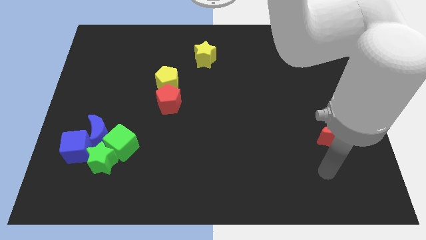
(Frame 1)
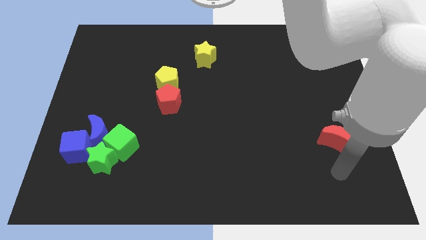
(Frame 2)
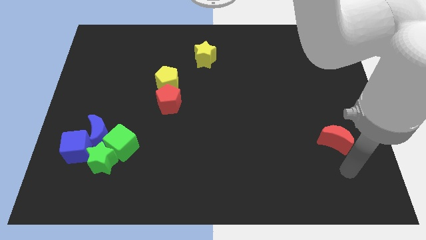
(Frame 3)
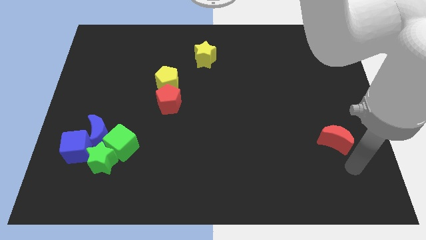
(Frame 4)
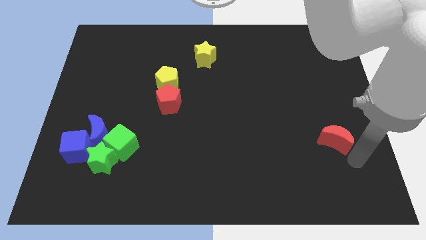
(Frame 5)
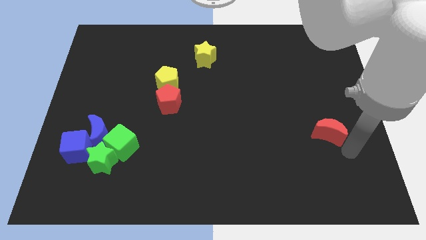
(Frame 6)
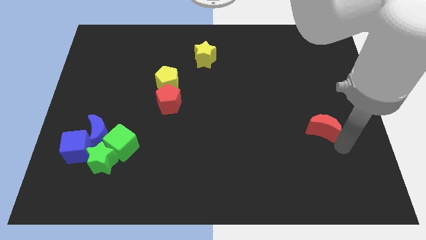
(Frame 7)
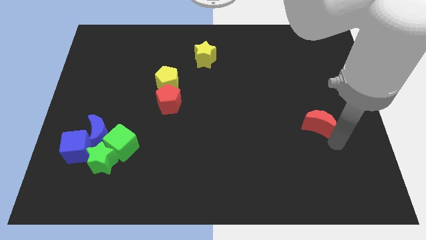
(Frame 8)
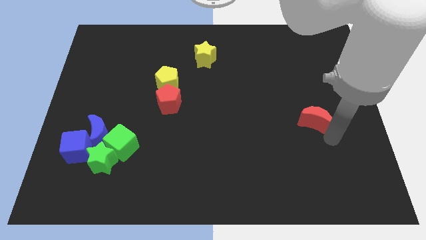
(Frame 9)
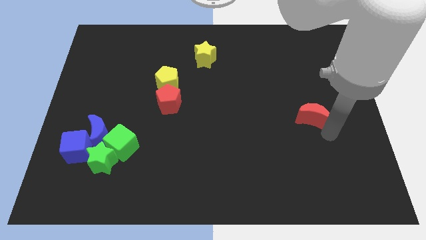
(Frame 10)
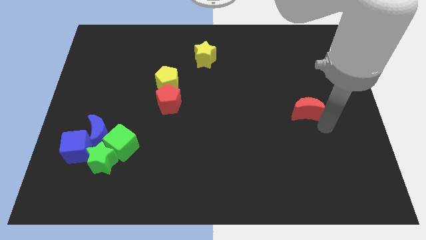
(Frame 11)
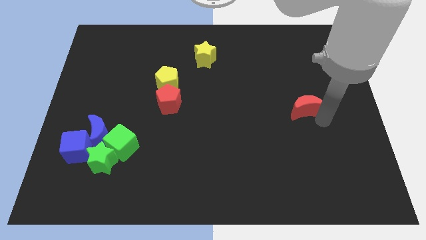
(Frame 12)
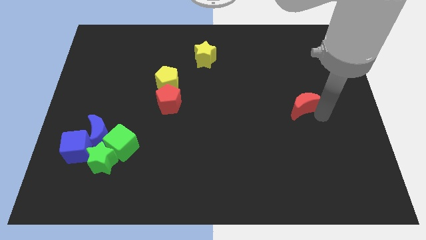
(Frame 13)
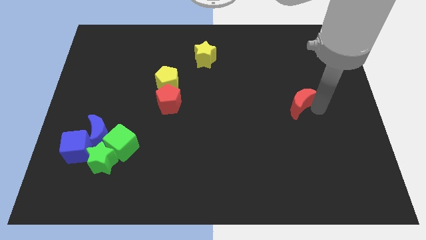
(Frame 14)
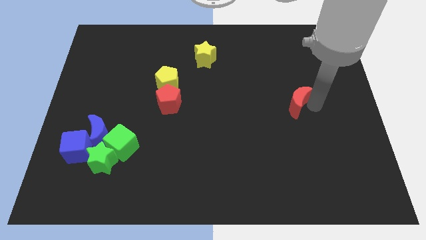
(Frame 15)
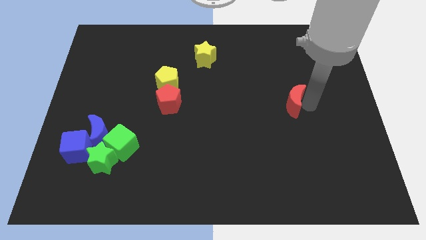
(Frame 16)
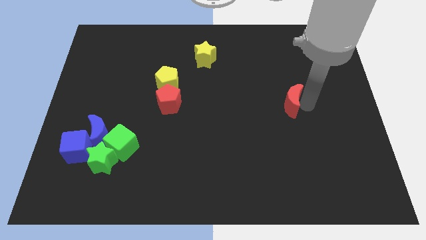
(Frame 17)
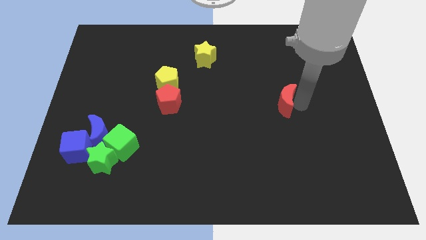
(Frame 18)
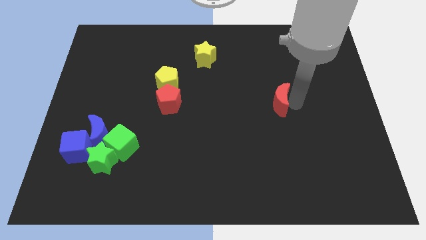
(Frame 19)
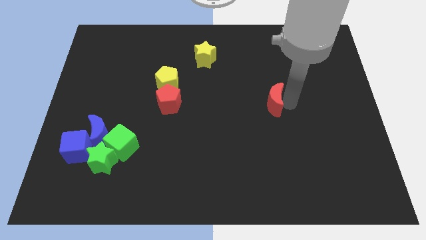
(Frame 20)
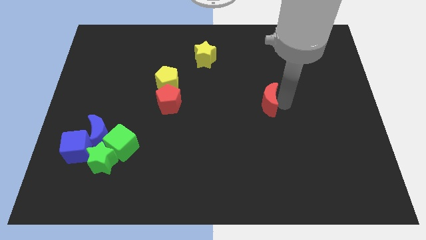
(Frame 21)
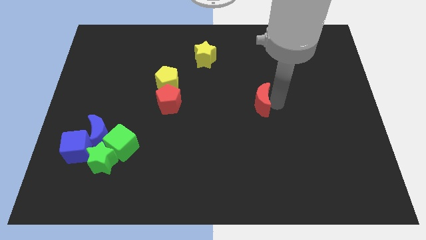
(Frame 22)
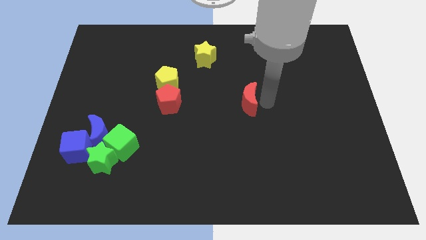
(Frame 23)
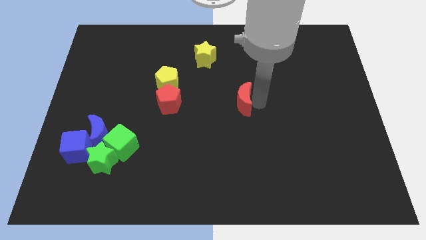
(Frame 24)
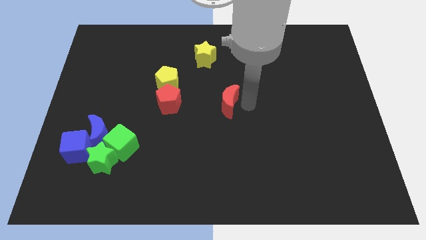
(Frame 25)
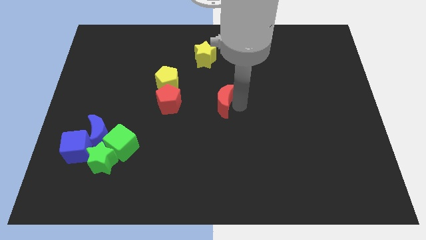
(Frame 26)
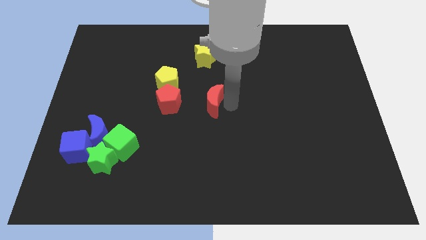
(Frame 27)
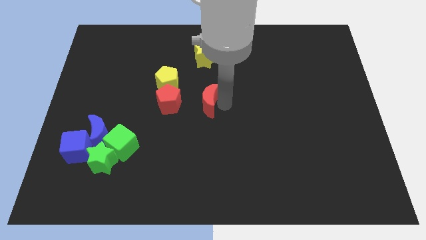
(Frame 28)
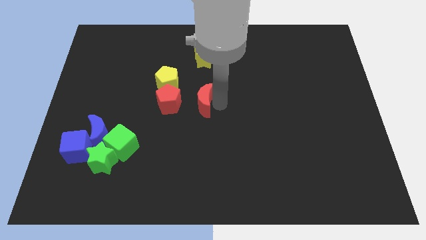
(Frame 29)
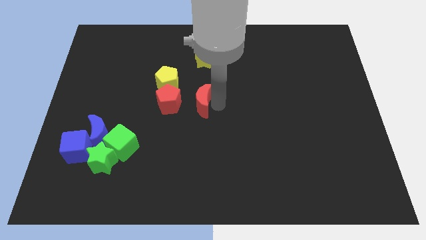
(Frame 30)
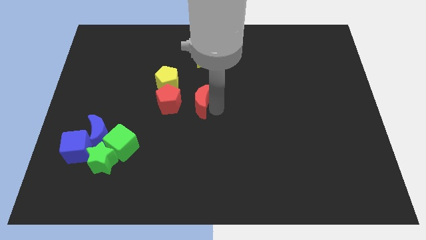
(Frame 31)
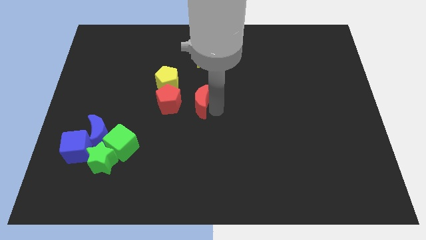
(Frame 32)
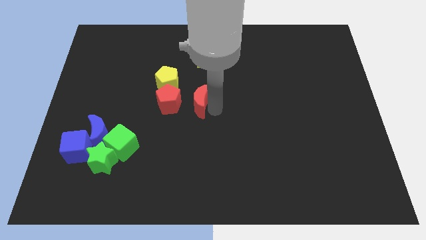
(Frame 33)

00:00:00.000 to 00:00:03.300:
move the red moon to the bottom side of the yellow star

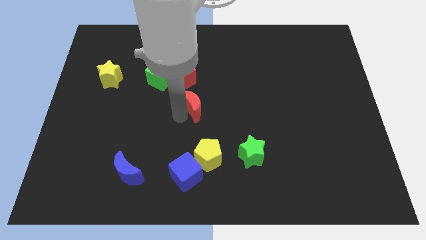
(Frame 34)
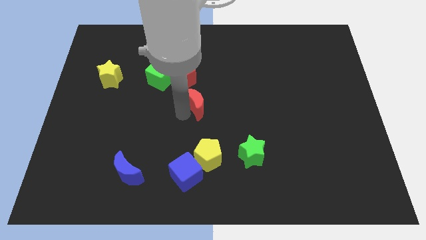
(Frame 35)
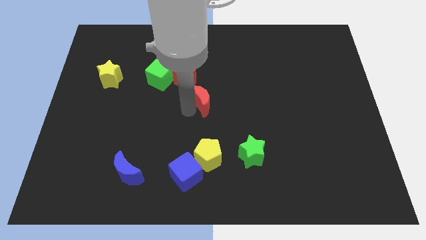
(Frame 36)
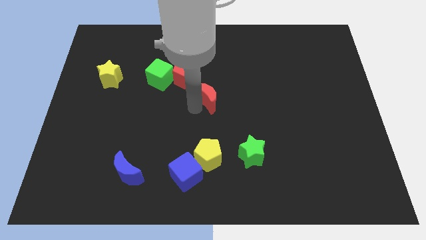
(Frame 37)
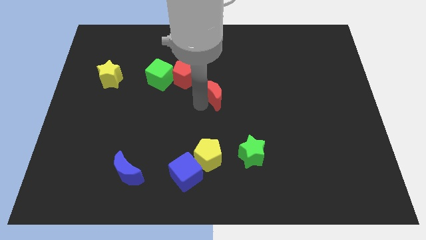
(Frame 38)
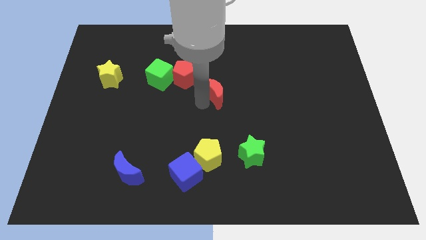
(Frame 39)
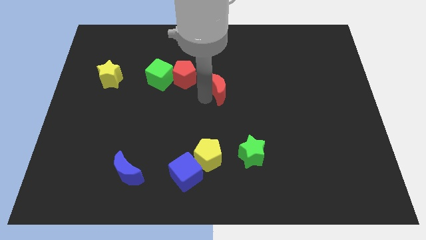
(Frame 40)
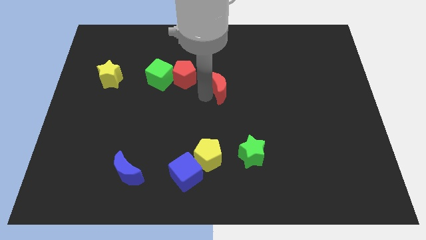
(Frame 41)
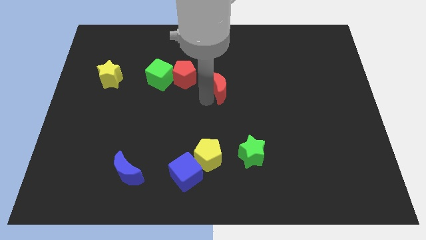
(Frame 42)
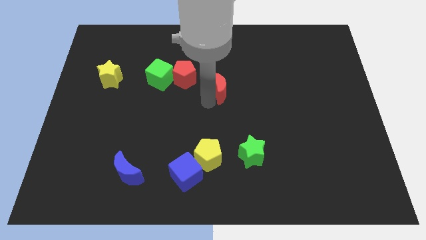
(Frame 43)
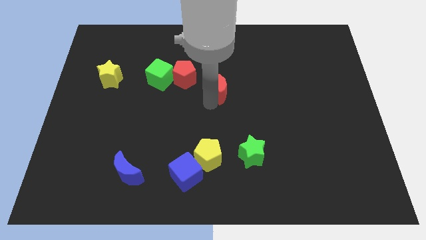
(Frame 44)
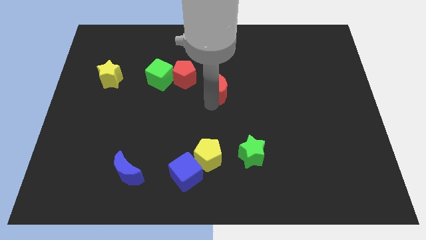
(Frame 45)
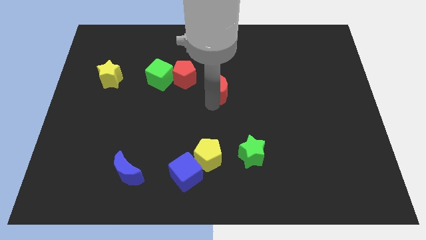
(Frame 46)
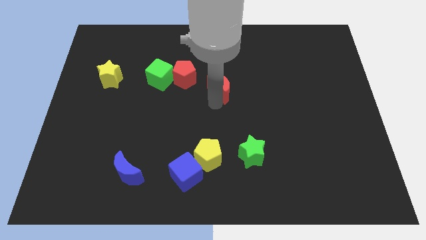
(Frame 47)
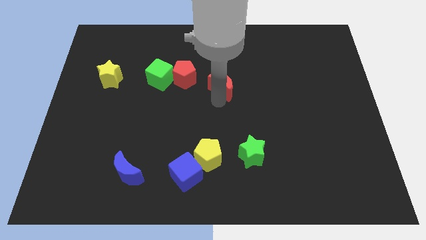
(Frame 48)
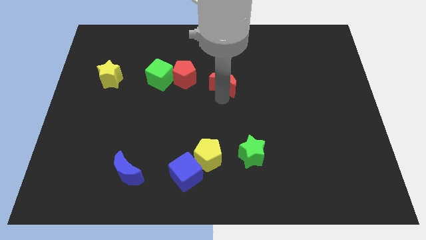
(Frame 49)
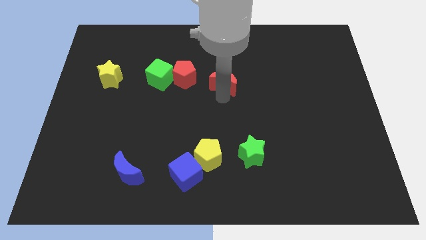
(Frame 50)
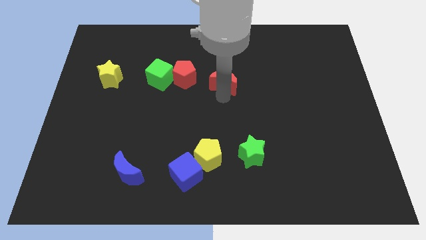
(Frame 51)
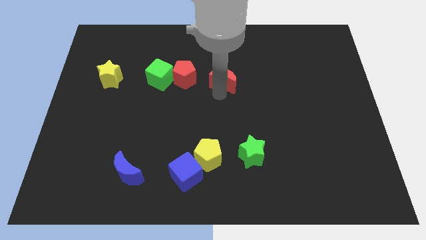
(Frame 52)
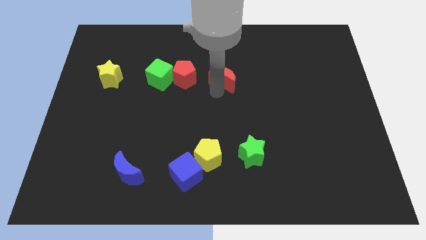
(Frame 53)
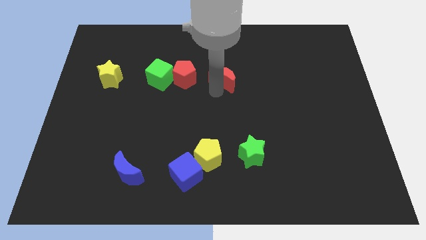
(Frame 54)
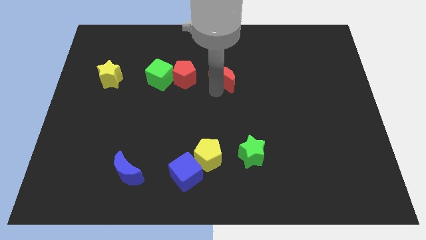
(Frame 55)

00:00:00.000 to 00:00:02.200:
drag red moon upwards

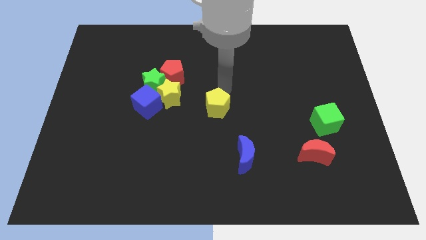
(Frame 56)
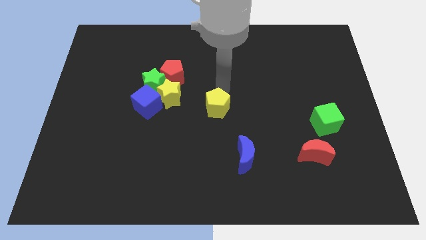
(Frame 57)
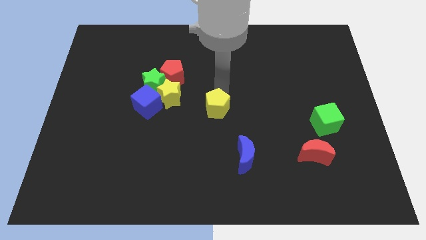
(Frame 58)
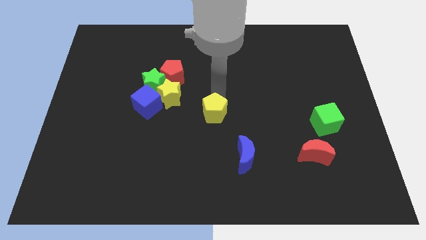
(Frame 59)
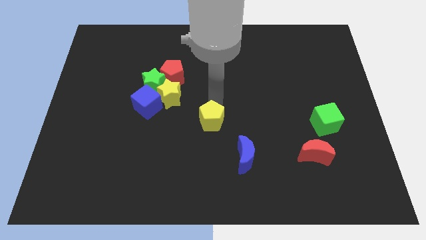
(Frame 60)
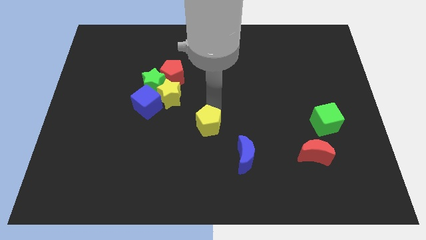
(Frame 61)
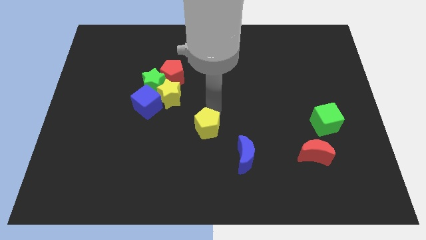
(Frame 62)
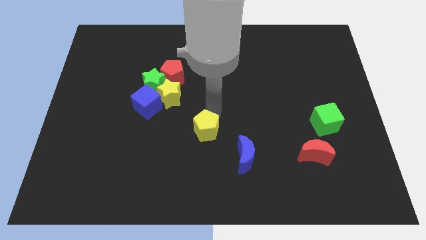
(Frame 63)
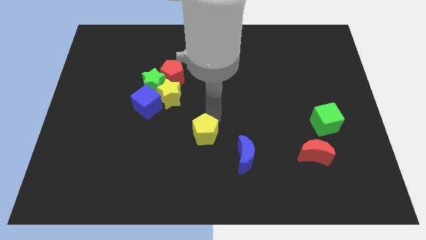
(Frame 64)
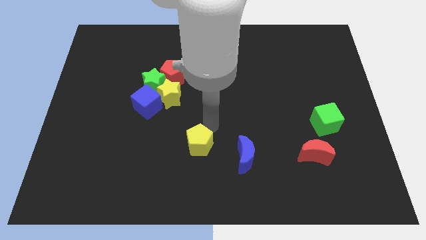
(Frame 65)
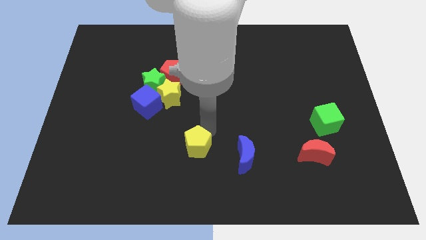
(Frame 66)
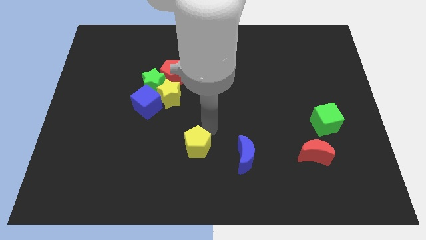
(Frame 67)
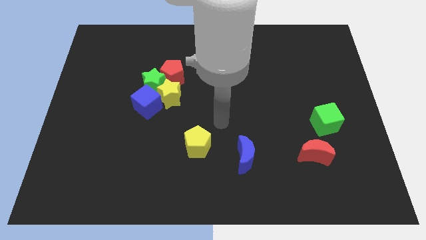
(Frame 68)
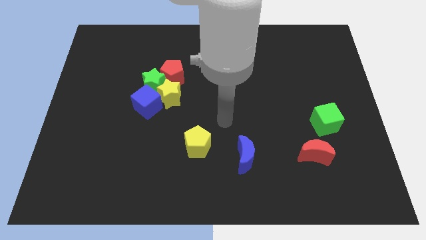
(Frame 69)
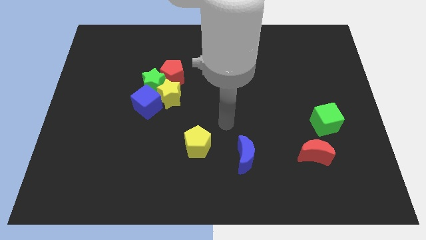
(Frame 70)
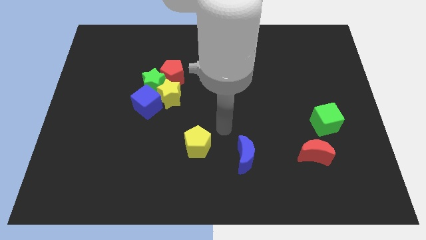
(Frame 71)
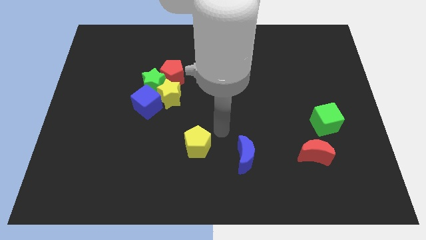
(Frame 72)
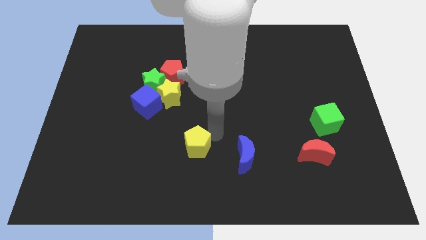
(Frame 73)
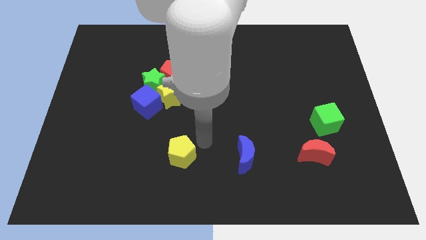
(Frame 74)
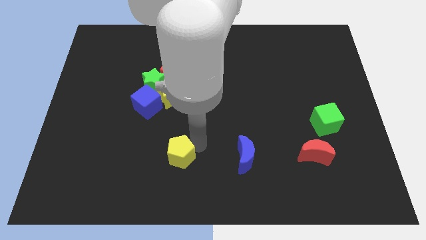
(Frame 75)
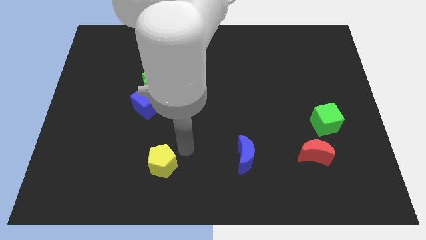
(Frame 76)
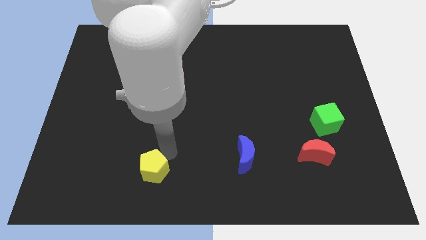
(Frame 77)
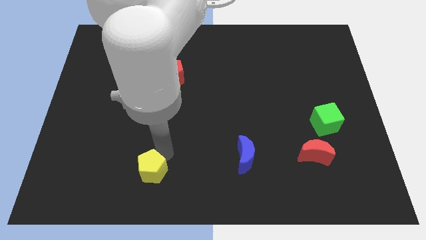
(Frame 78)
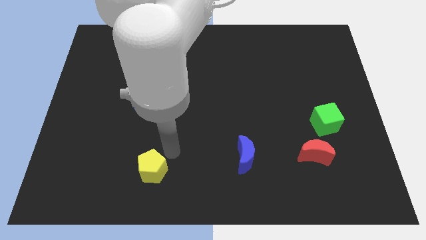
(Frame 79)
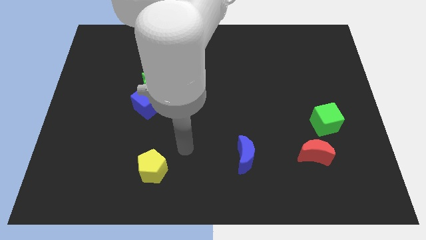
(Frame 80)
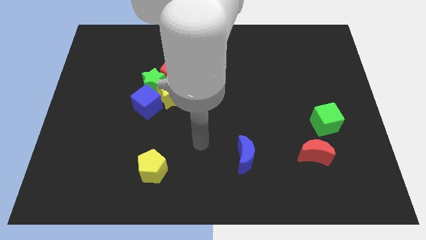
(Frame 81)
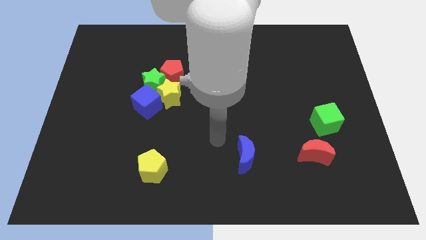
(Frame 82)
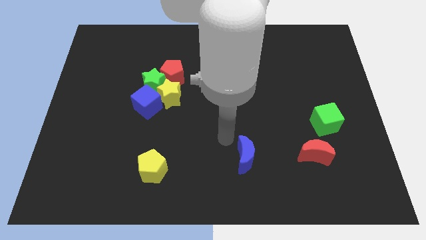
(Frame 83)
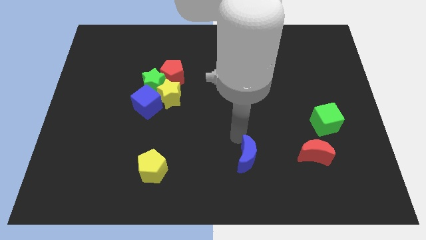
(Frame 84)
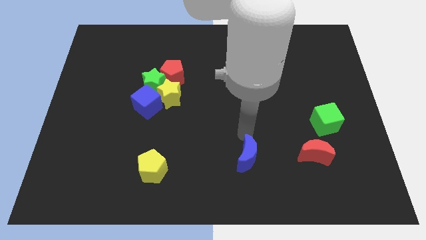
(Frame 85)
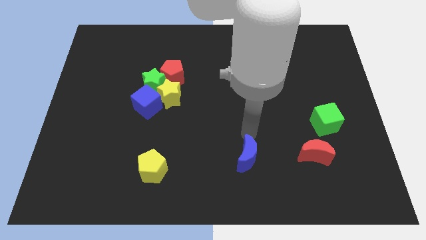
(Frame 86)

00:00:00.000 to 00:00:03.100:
move the yellow pentagon to the bottom of the board

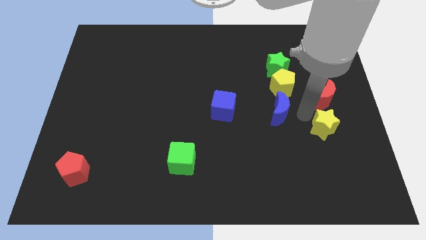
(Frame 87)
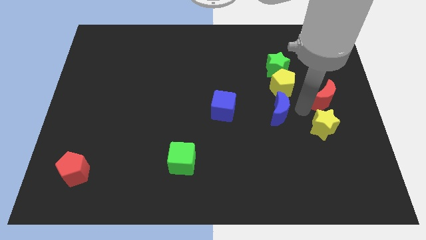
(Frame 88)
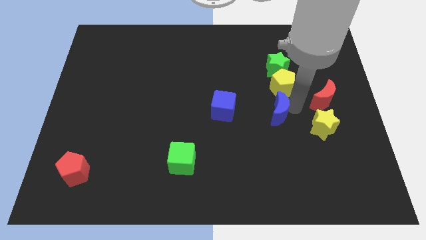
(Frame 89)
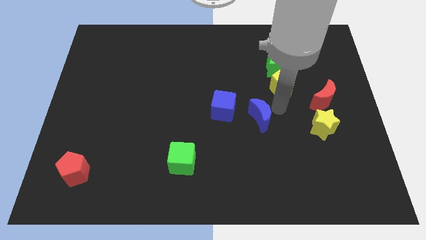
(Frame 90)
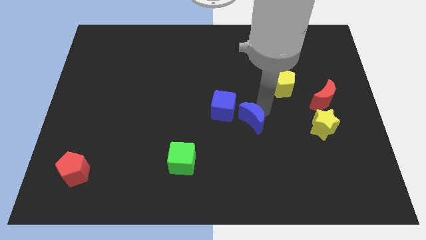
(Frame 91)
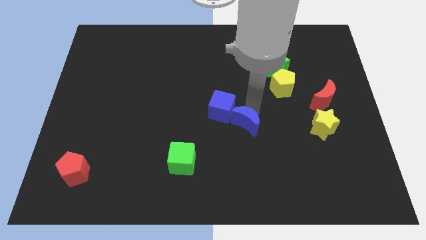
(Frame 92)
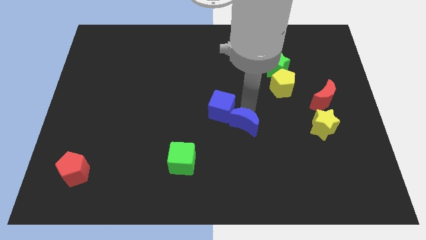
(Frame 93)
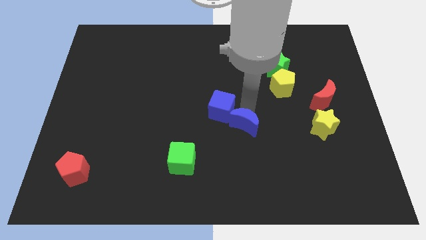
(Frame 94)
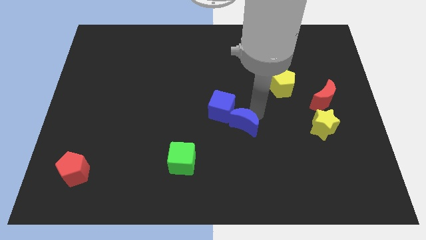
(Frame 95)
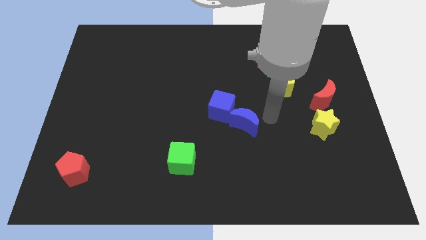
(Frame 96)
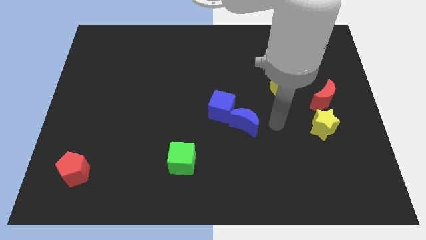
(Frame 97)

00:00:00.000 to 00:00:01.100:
move the blue crescent into the blue cube
